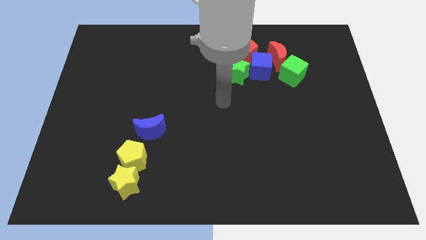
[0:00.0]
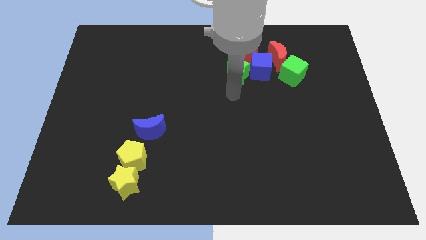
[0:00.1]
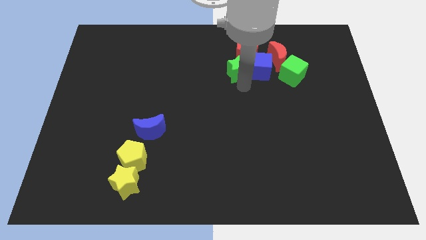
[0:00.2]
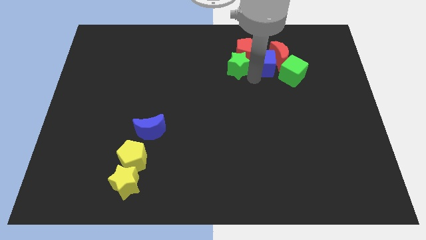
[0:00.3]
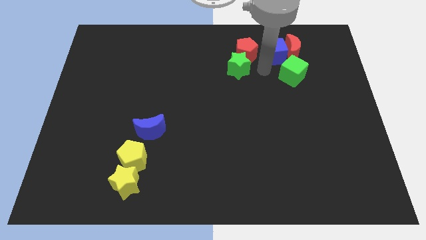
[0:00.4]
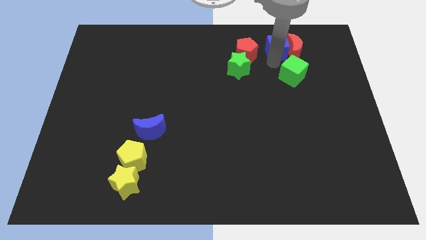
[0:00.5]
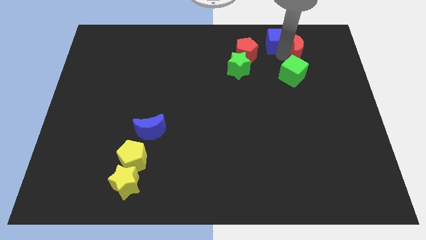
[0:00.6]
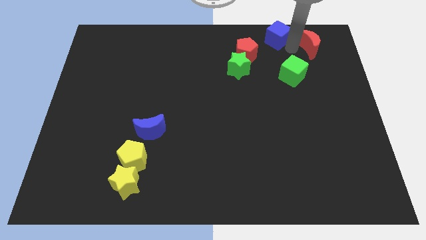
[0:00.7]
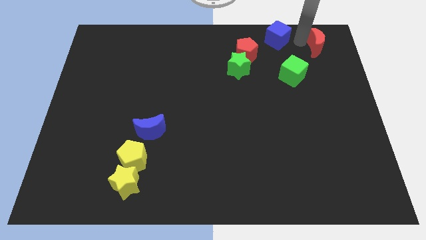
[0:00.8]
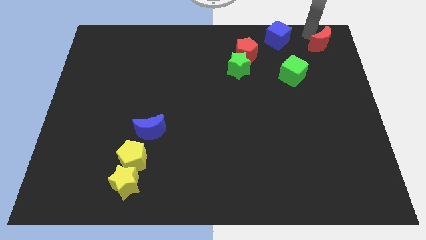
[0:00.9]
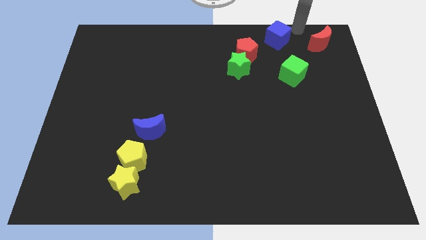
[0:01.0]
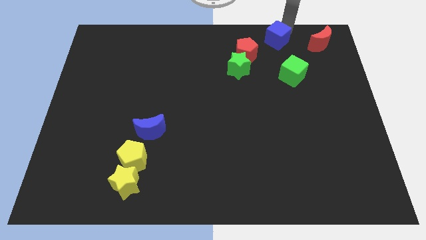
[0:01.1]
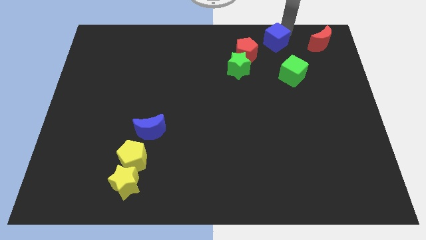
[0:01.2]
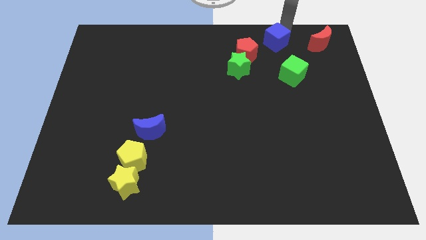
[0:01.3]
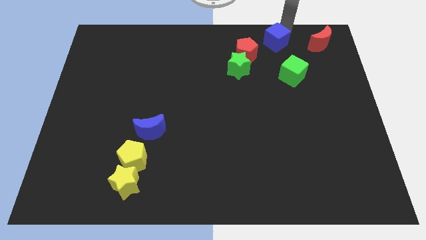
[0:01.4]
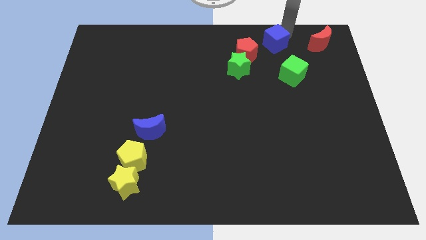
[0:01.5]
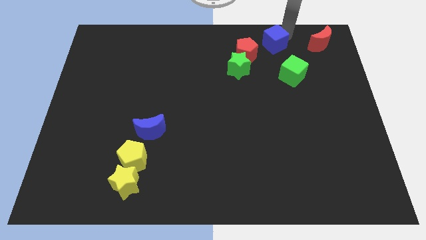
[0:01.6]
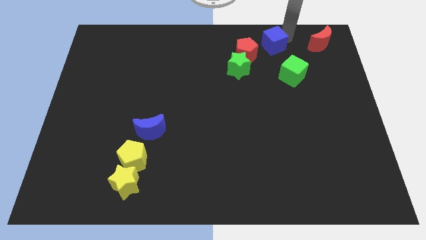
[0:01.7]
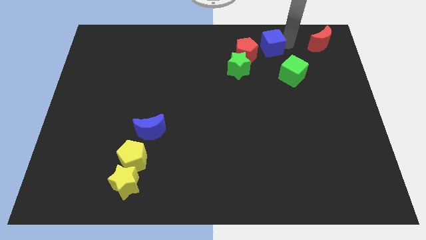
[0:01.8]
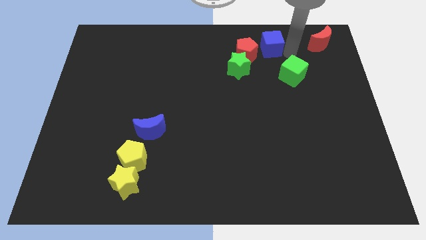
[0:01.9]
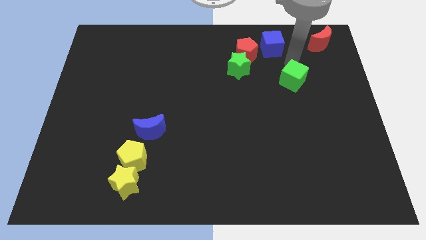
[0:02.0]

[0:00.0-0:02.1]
slide the blue cube diagonally to the red pentagon

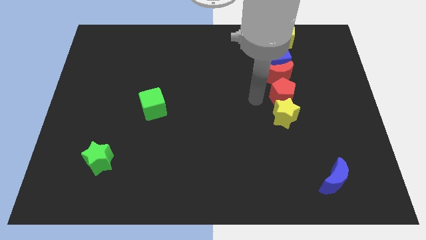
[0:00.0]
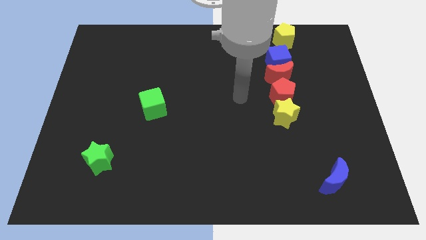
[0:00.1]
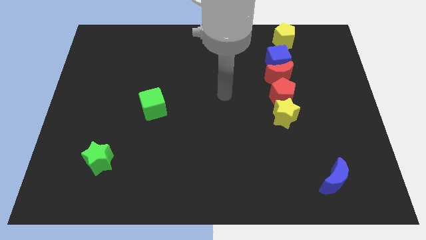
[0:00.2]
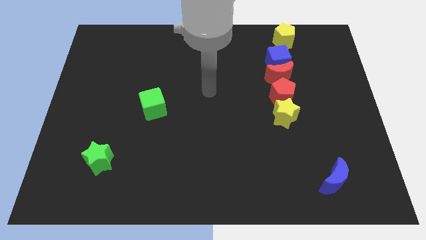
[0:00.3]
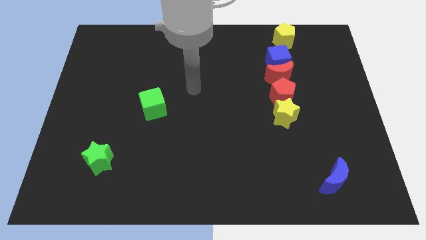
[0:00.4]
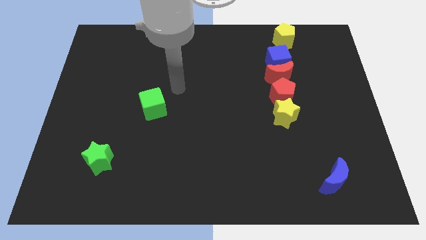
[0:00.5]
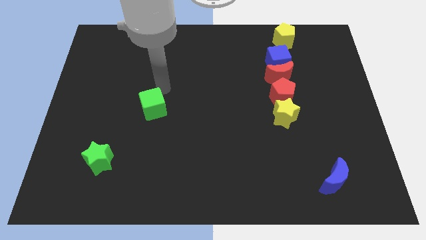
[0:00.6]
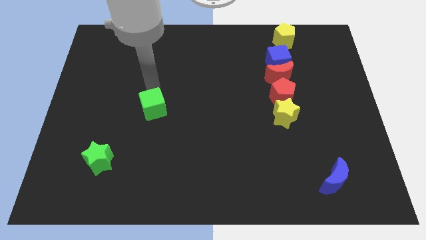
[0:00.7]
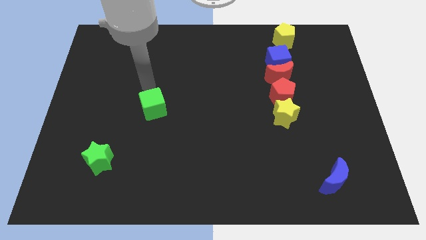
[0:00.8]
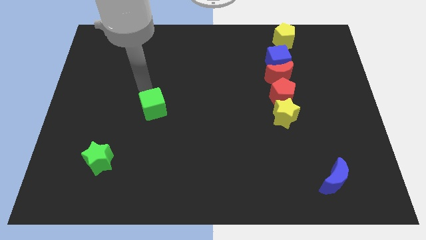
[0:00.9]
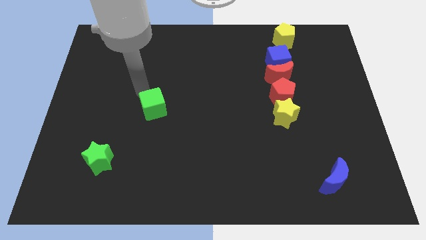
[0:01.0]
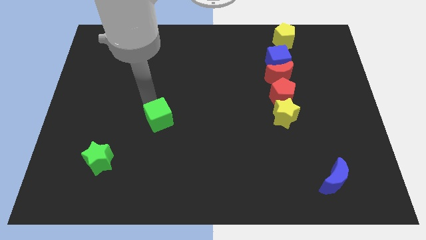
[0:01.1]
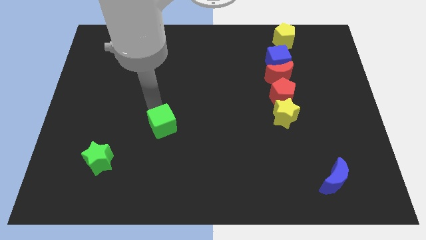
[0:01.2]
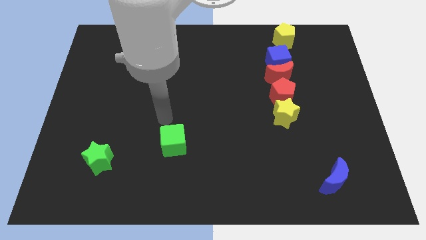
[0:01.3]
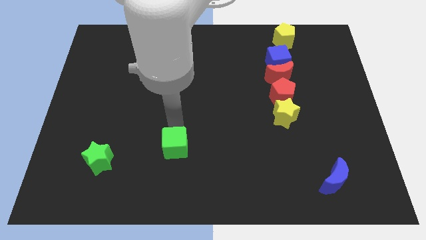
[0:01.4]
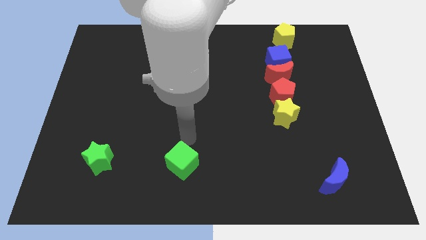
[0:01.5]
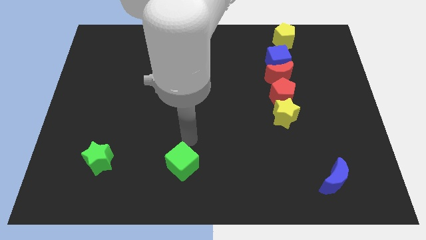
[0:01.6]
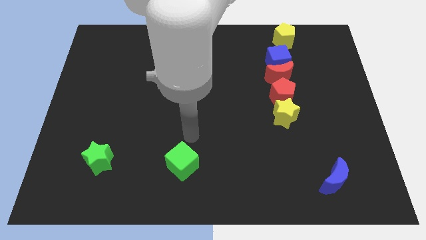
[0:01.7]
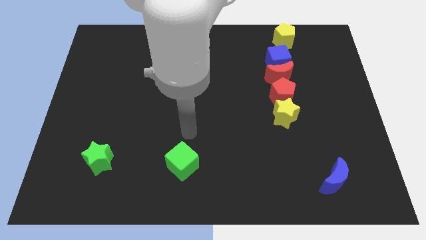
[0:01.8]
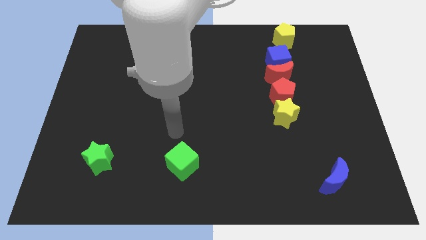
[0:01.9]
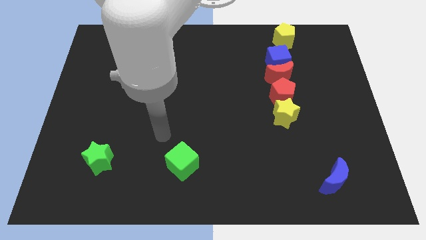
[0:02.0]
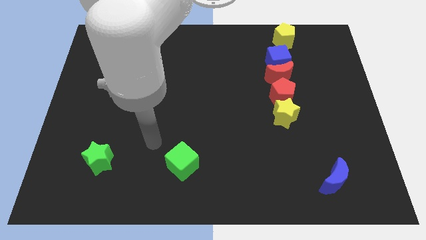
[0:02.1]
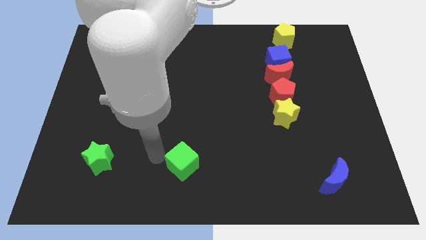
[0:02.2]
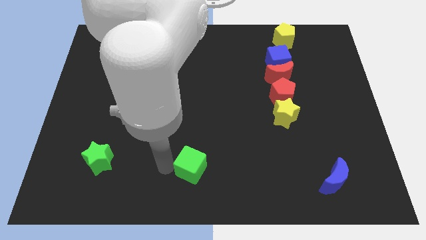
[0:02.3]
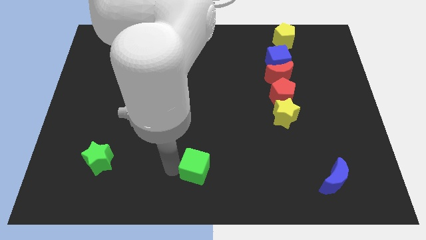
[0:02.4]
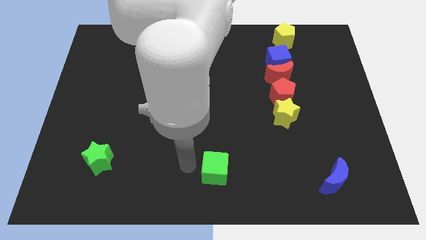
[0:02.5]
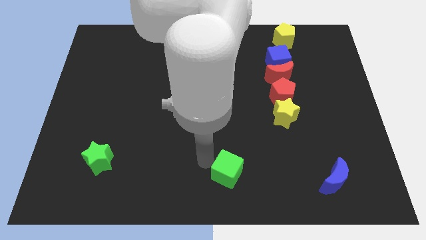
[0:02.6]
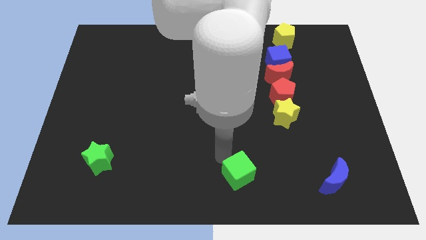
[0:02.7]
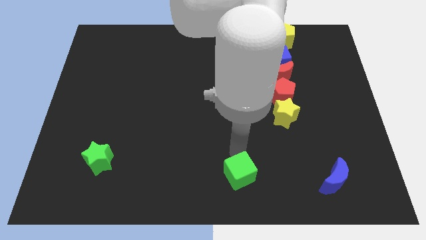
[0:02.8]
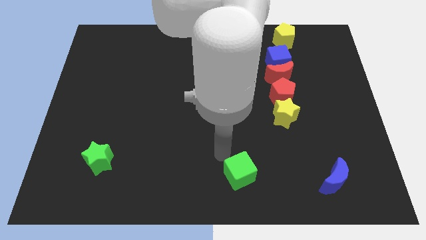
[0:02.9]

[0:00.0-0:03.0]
place the green cube left to the blue moon

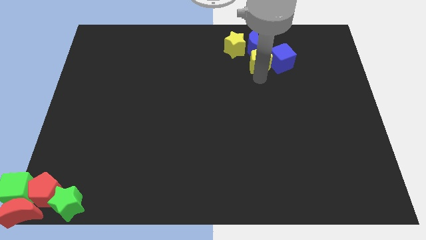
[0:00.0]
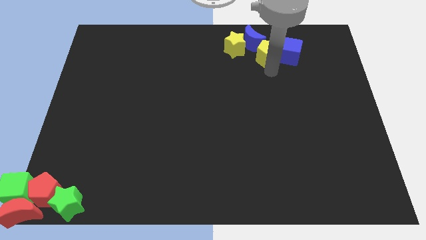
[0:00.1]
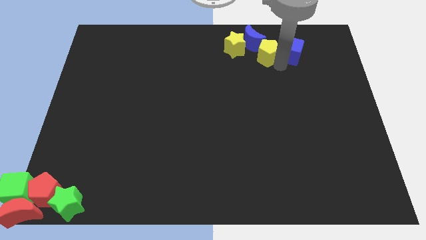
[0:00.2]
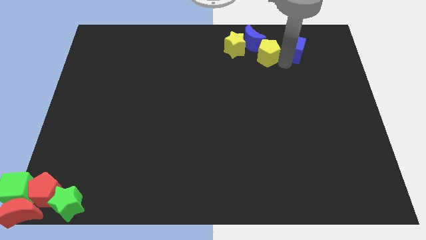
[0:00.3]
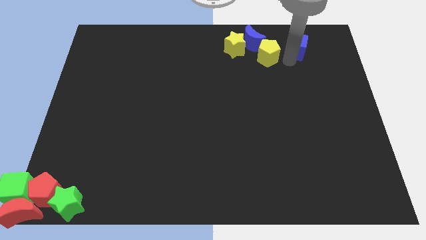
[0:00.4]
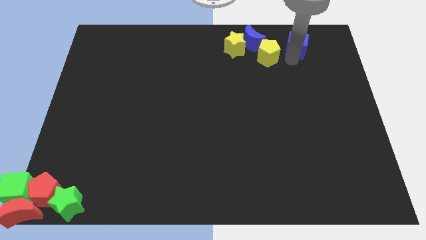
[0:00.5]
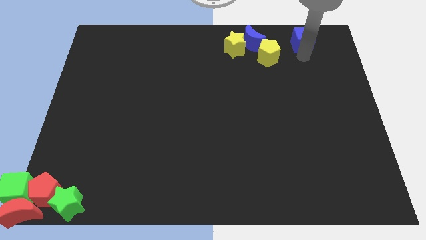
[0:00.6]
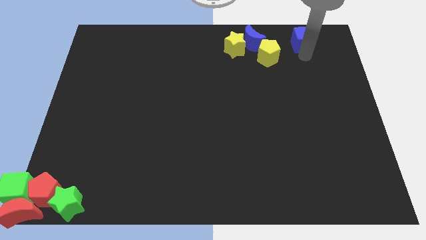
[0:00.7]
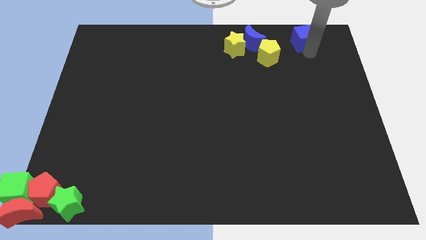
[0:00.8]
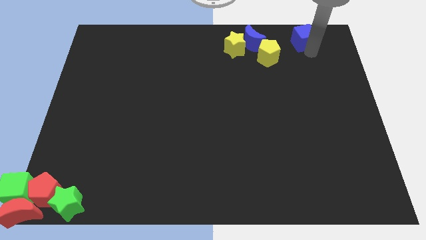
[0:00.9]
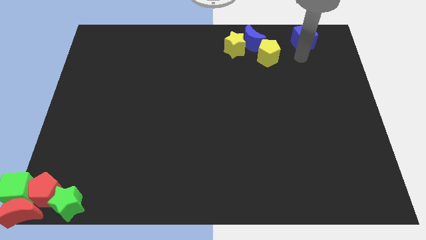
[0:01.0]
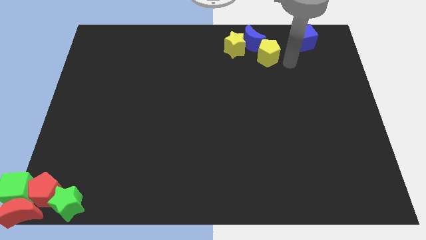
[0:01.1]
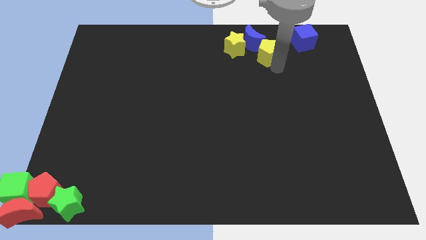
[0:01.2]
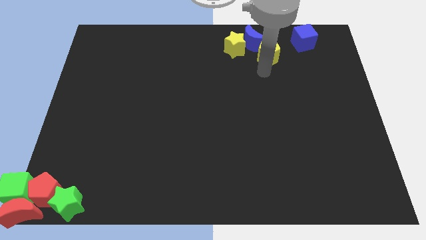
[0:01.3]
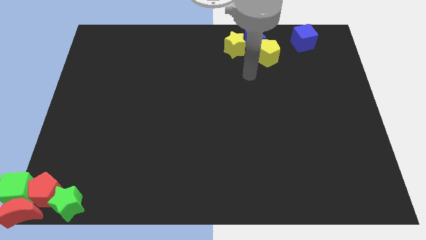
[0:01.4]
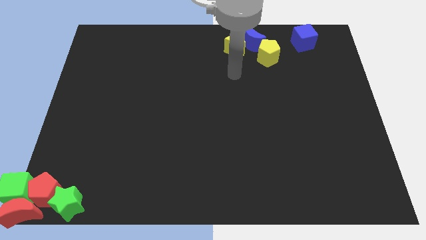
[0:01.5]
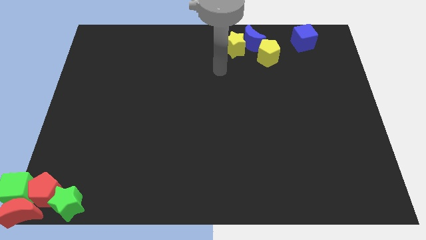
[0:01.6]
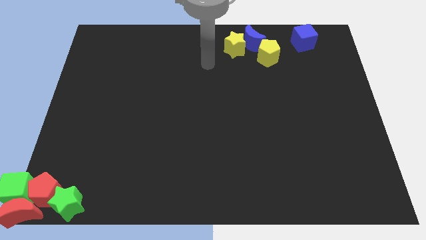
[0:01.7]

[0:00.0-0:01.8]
separate the blue cube from the yellow pentagon

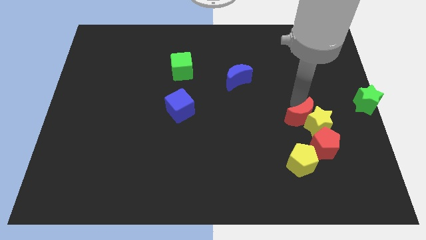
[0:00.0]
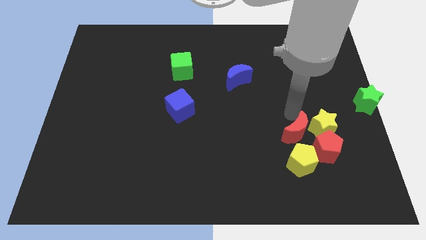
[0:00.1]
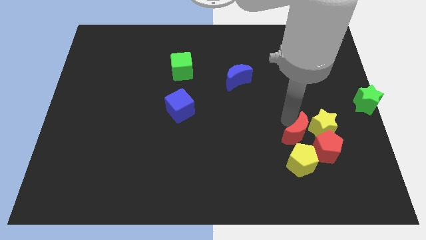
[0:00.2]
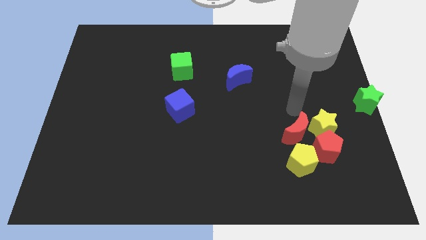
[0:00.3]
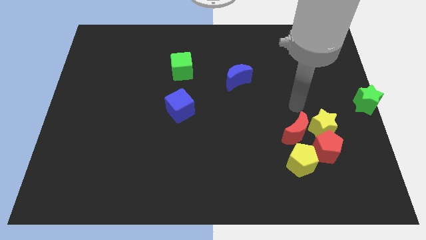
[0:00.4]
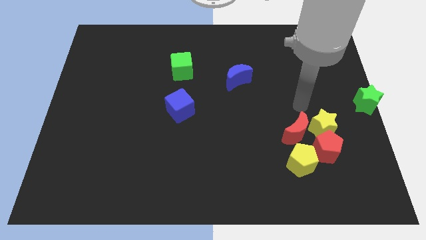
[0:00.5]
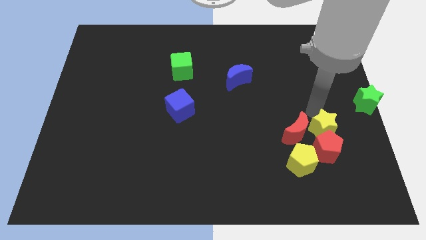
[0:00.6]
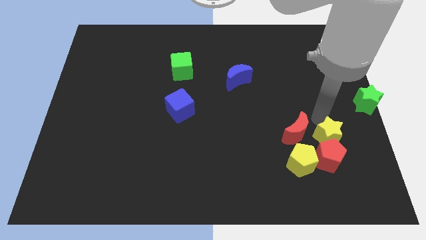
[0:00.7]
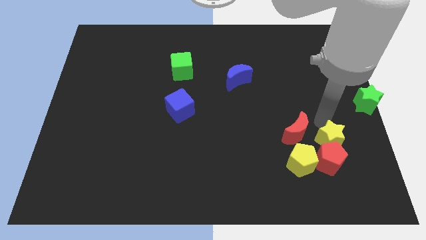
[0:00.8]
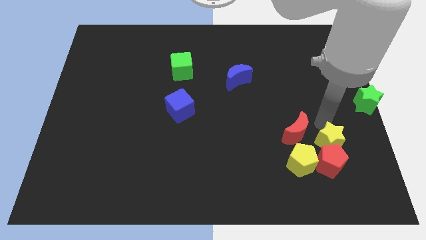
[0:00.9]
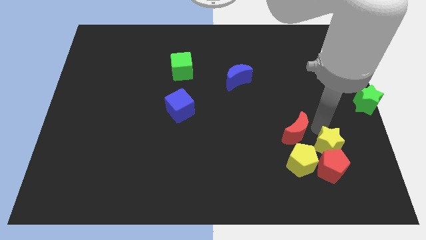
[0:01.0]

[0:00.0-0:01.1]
push red crescent into the yellow star

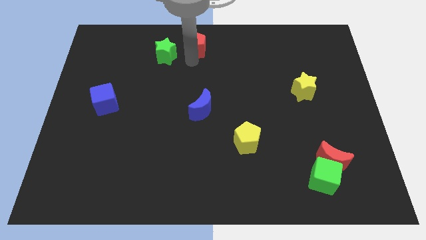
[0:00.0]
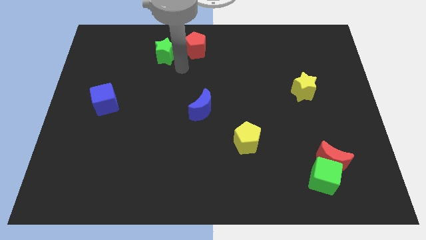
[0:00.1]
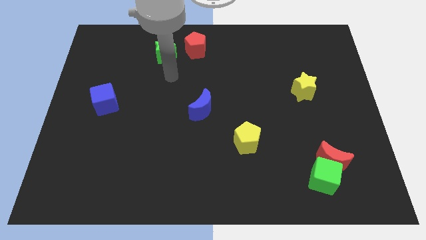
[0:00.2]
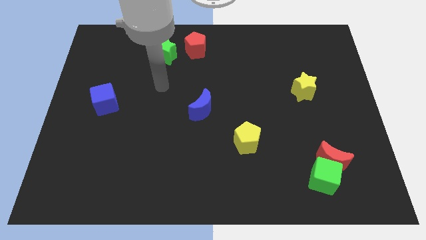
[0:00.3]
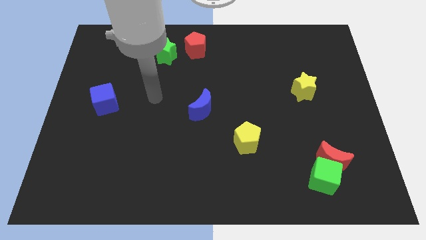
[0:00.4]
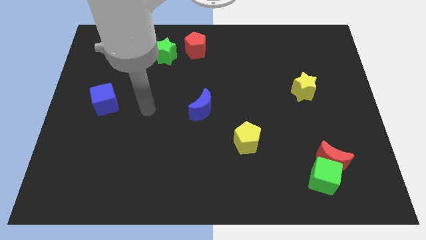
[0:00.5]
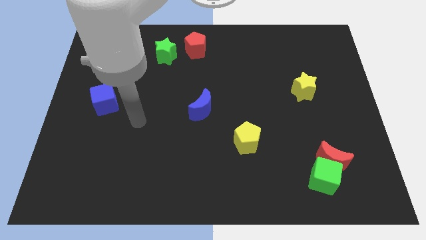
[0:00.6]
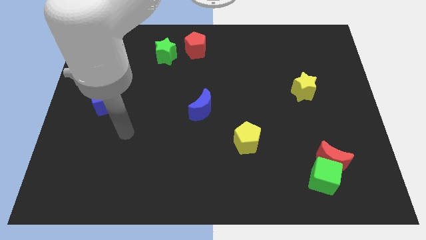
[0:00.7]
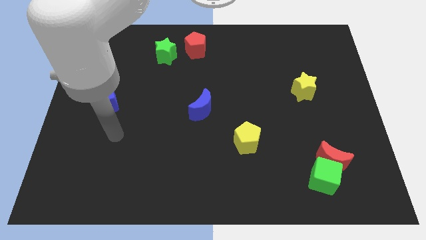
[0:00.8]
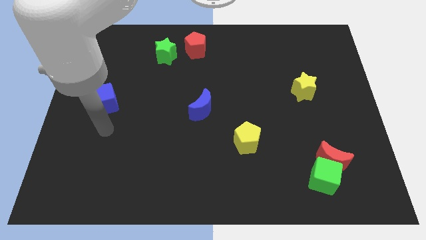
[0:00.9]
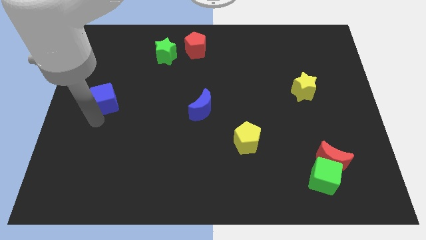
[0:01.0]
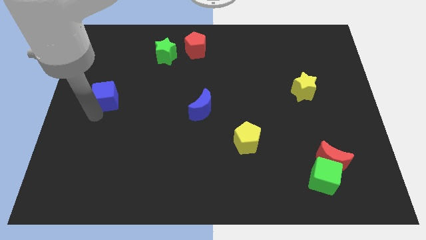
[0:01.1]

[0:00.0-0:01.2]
place your arm near blue cube
